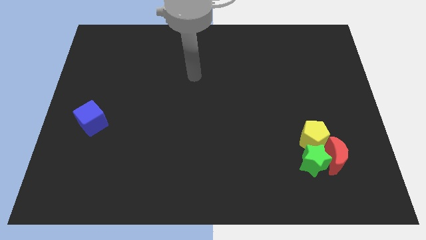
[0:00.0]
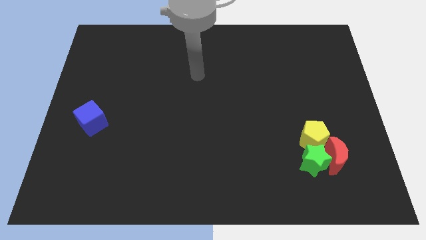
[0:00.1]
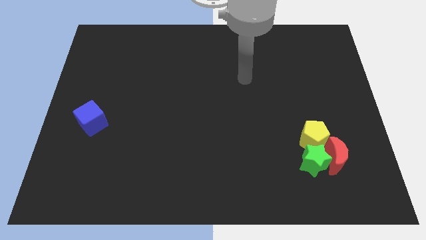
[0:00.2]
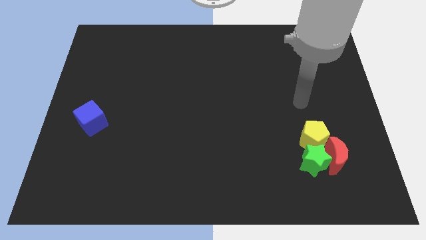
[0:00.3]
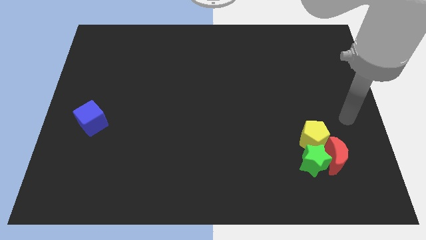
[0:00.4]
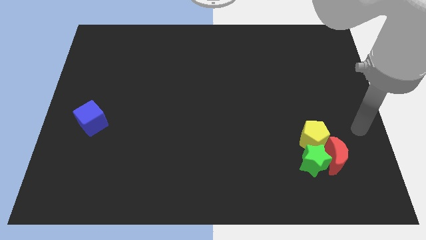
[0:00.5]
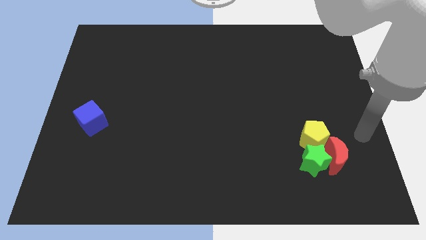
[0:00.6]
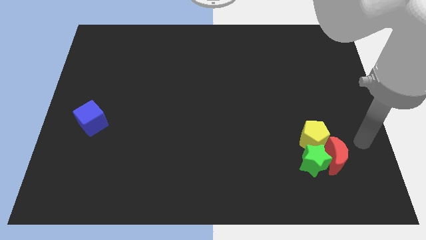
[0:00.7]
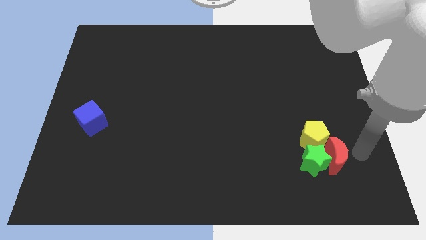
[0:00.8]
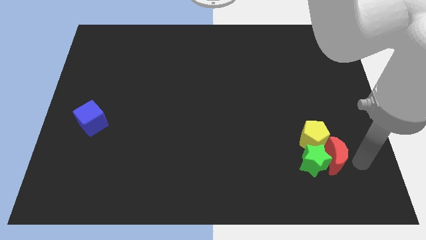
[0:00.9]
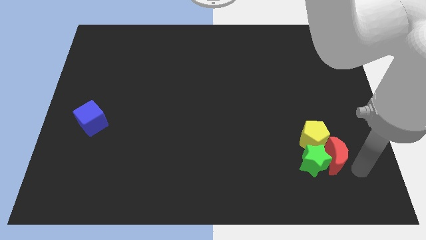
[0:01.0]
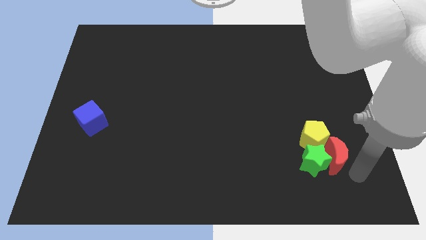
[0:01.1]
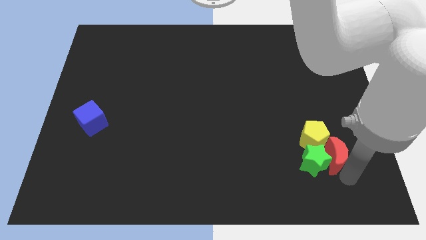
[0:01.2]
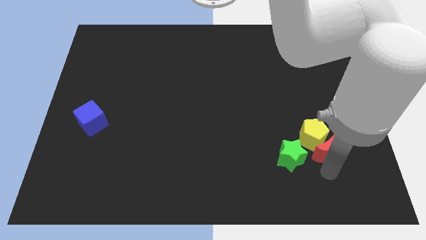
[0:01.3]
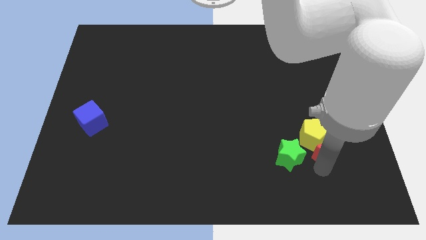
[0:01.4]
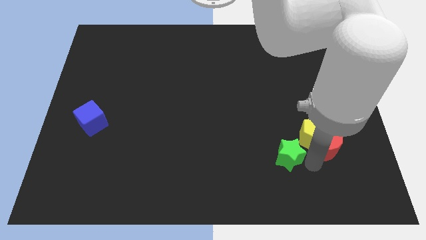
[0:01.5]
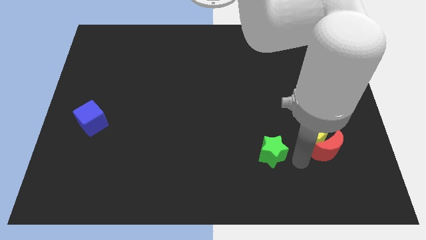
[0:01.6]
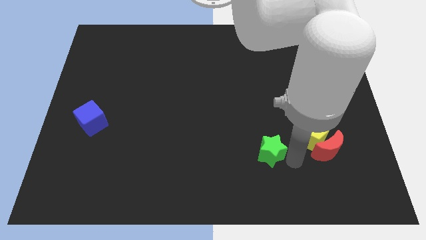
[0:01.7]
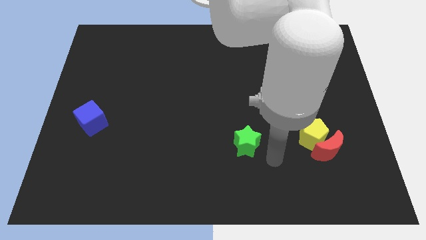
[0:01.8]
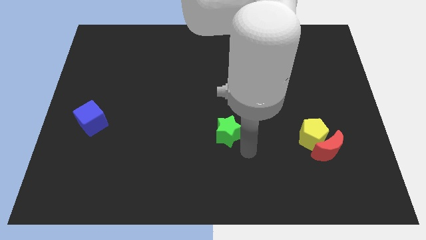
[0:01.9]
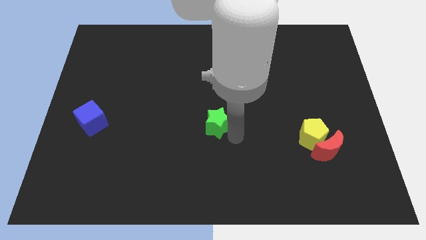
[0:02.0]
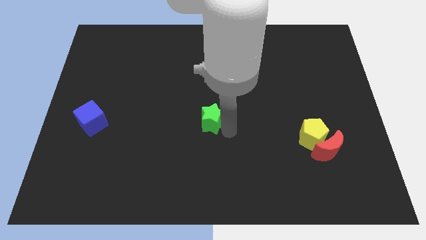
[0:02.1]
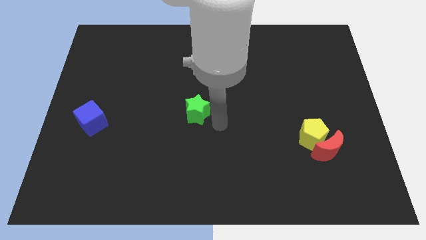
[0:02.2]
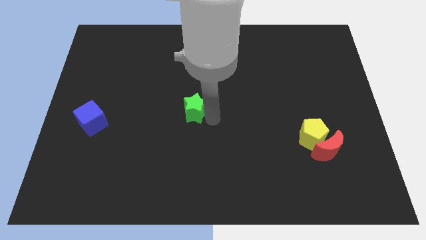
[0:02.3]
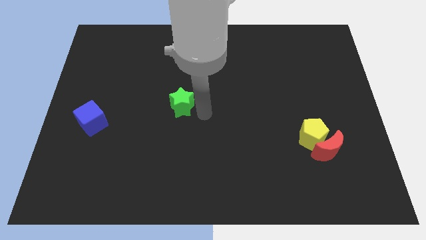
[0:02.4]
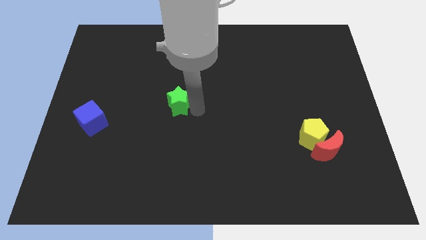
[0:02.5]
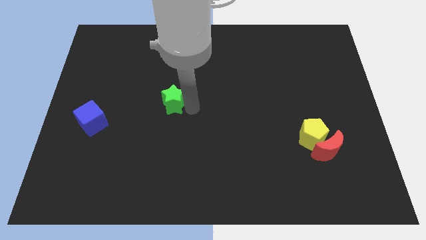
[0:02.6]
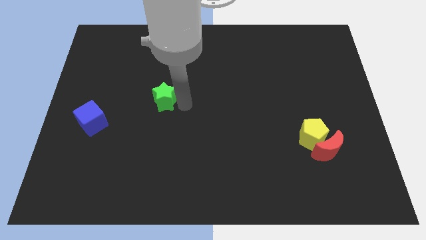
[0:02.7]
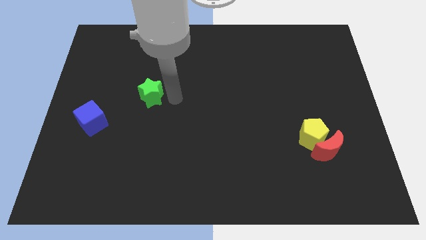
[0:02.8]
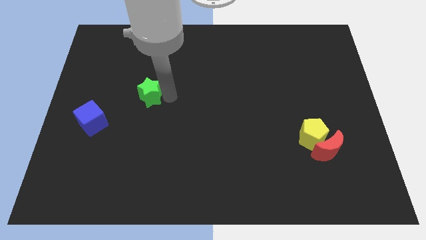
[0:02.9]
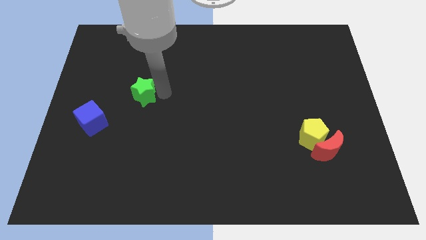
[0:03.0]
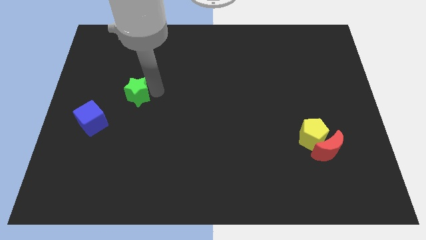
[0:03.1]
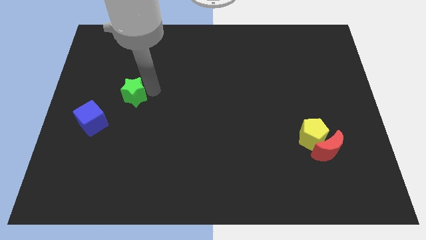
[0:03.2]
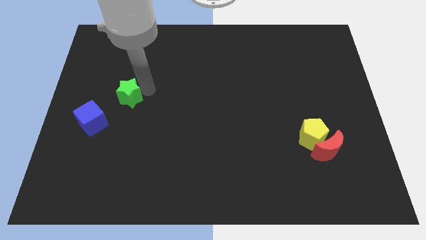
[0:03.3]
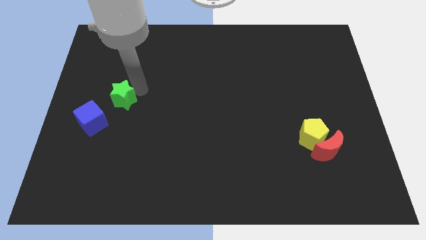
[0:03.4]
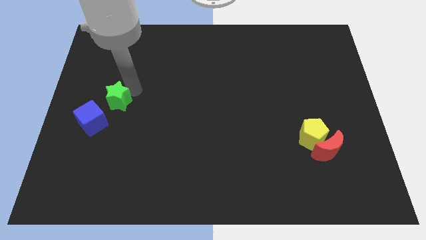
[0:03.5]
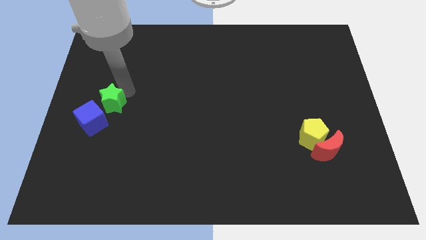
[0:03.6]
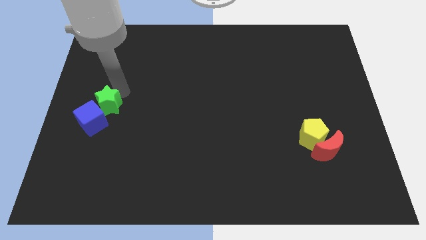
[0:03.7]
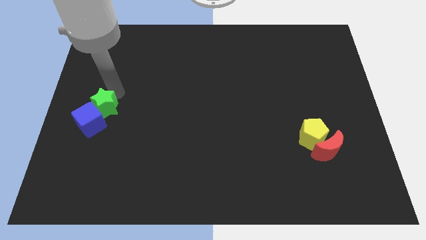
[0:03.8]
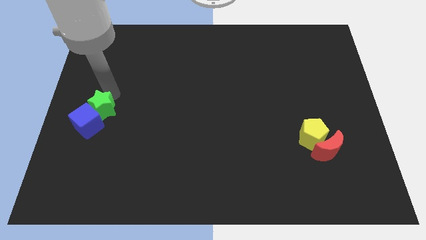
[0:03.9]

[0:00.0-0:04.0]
slide the star next to the blue block

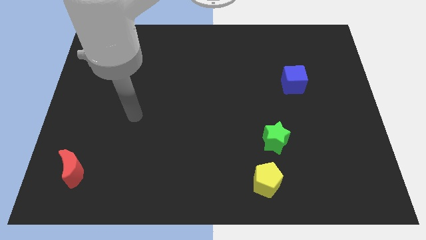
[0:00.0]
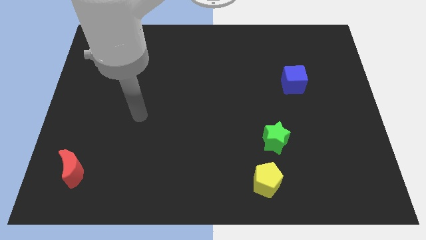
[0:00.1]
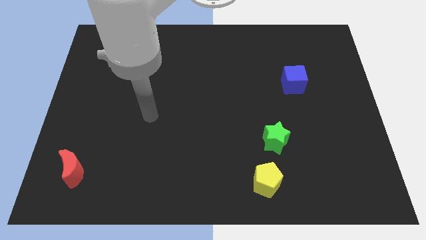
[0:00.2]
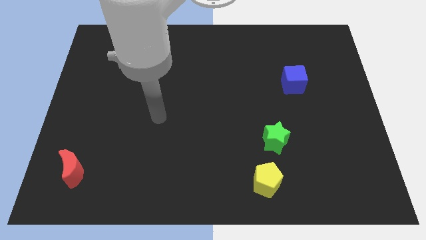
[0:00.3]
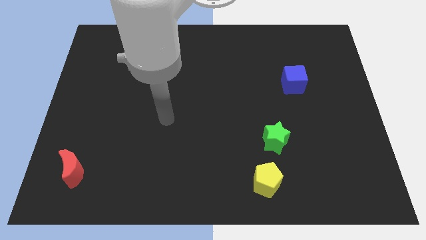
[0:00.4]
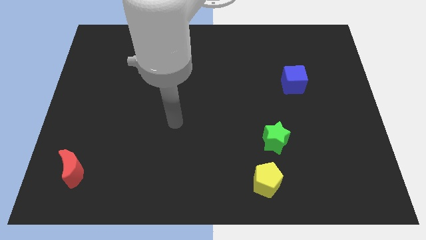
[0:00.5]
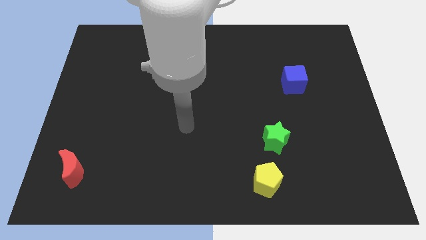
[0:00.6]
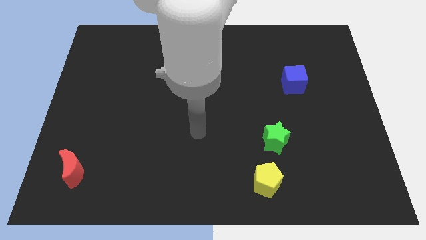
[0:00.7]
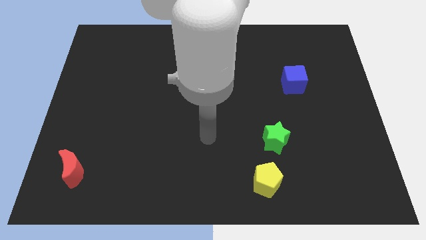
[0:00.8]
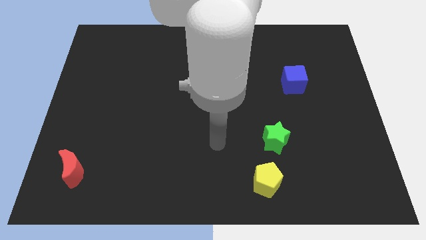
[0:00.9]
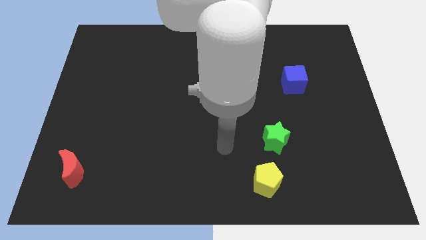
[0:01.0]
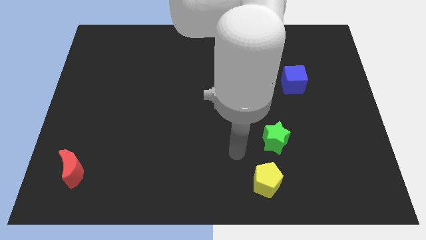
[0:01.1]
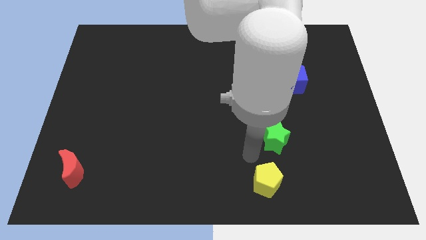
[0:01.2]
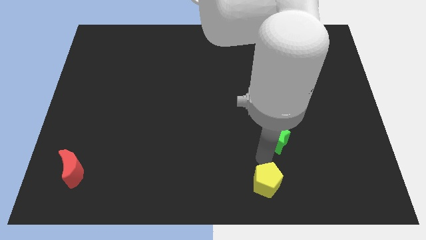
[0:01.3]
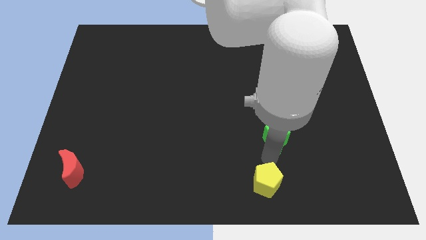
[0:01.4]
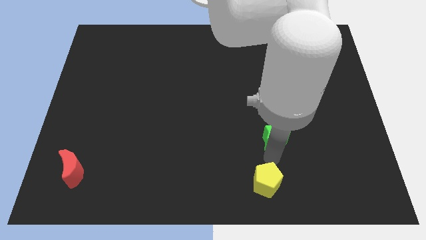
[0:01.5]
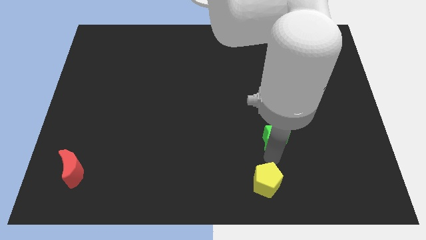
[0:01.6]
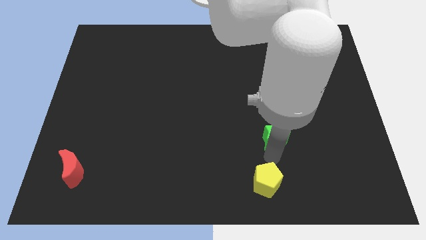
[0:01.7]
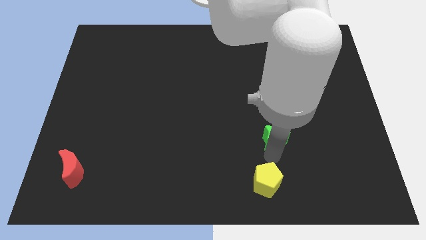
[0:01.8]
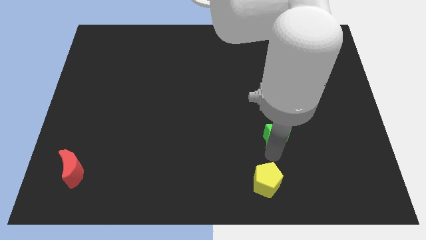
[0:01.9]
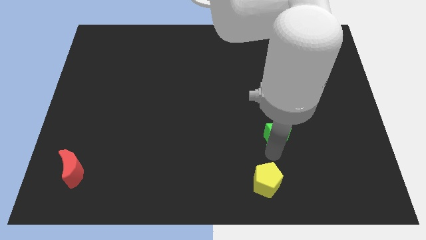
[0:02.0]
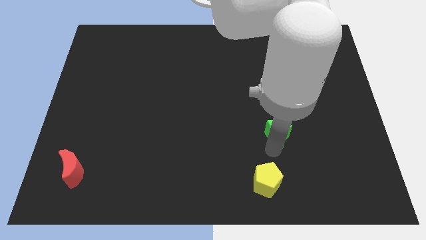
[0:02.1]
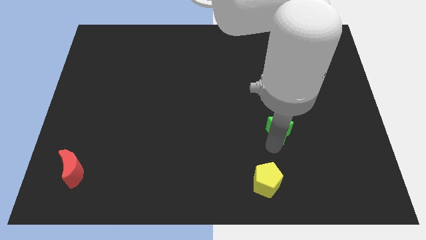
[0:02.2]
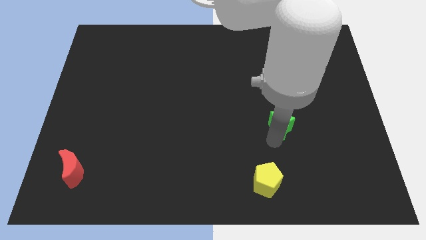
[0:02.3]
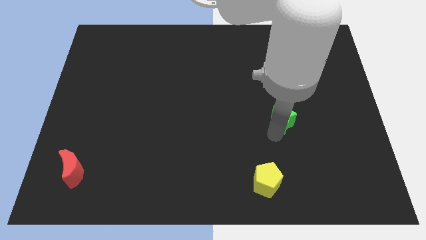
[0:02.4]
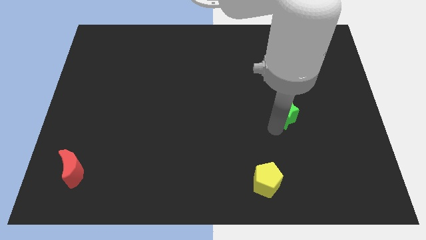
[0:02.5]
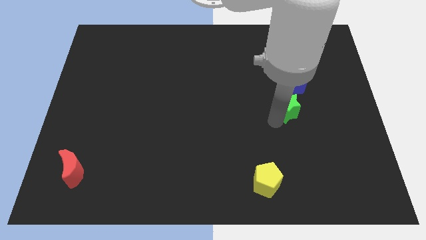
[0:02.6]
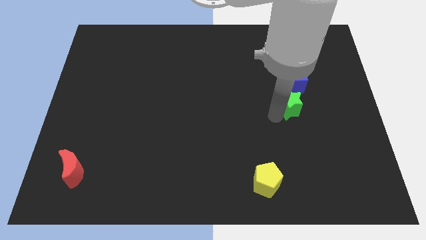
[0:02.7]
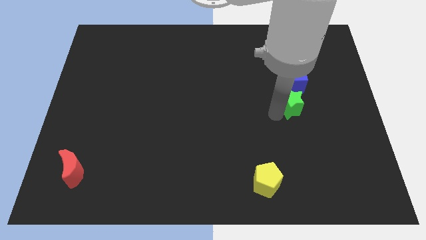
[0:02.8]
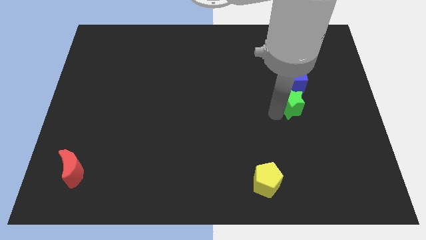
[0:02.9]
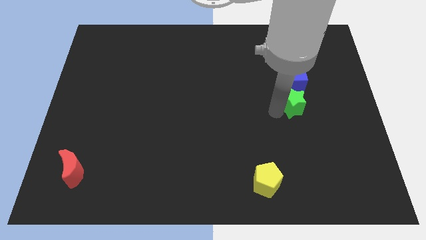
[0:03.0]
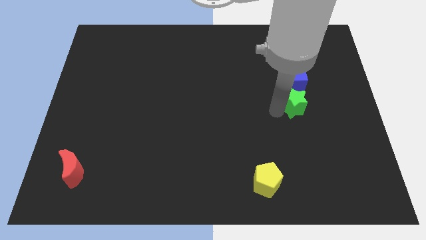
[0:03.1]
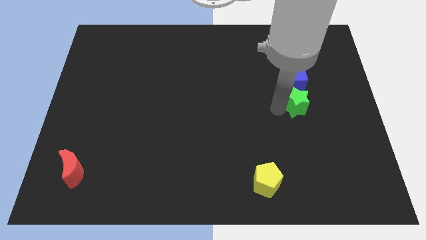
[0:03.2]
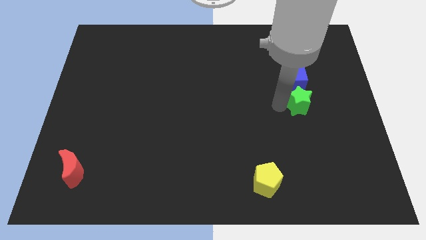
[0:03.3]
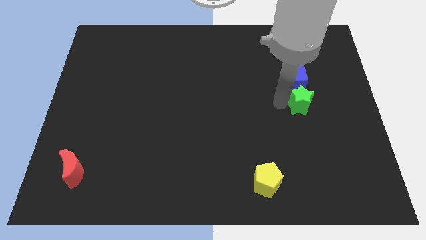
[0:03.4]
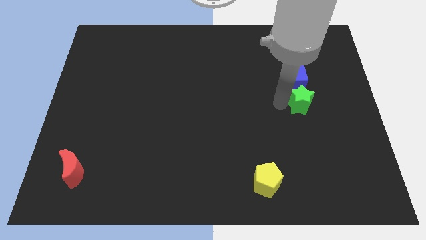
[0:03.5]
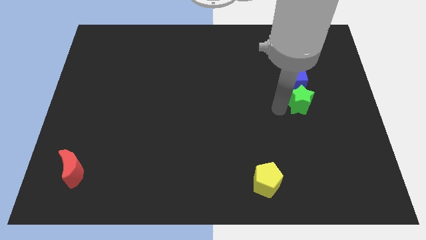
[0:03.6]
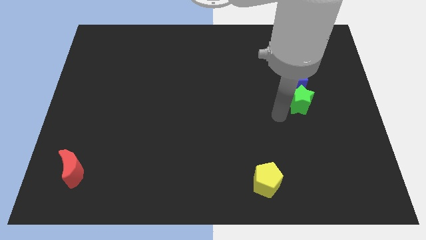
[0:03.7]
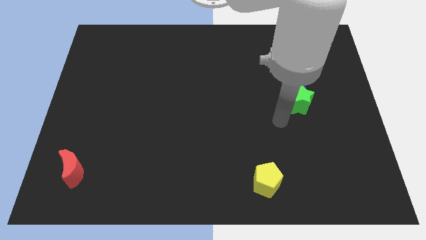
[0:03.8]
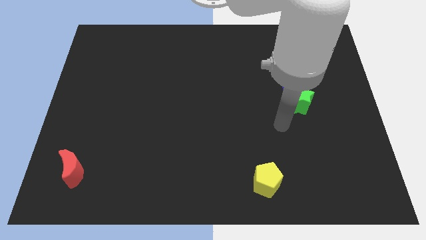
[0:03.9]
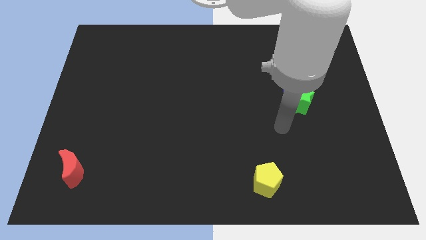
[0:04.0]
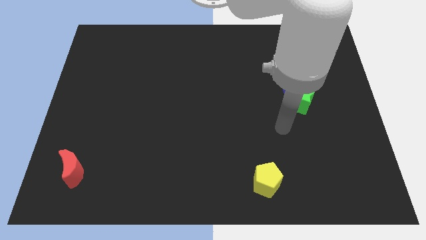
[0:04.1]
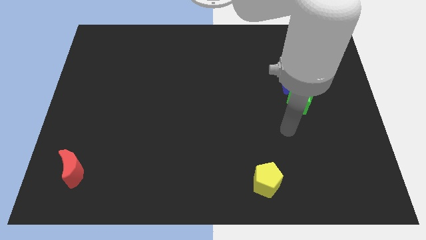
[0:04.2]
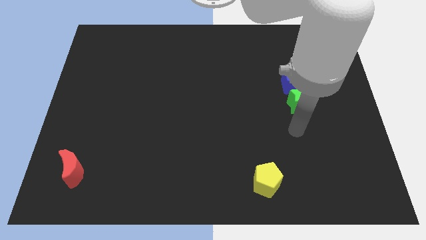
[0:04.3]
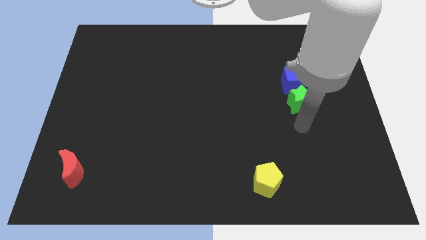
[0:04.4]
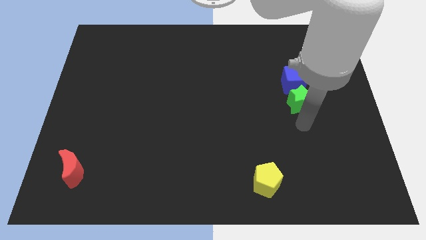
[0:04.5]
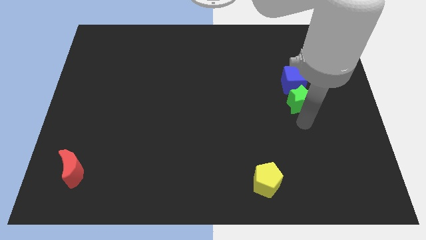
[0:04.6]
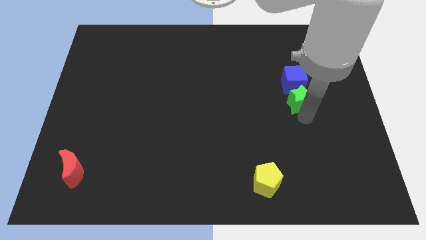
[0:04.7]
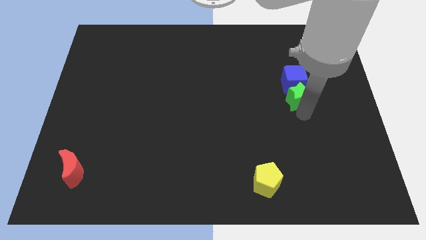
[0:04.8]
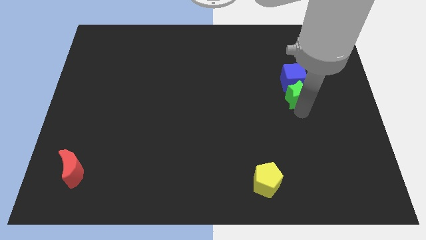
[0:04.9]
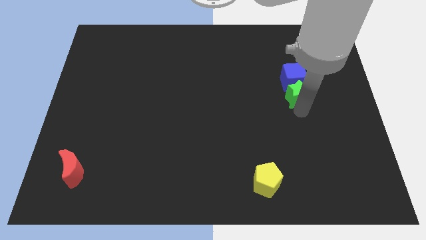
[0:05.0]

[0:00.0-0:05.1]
slide the green block next to the cube
